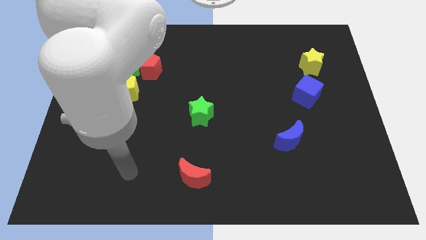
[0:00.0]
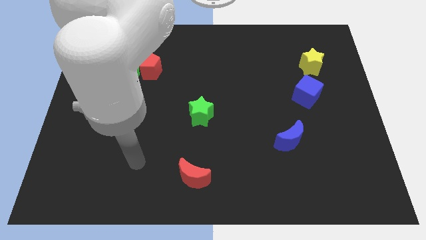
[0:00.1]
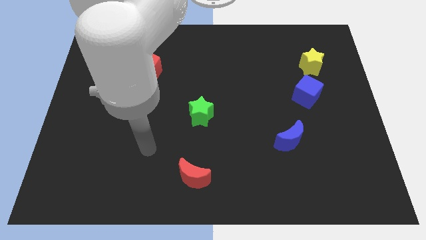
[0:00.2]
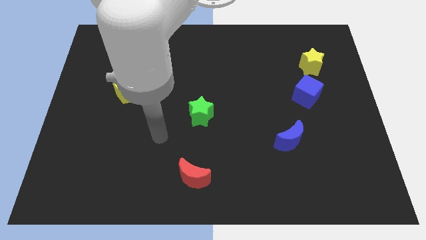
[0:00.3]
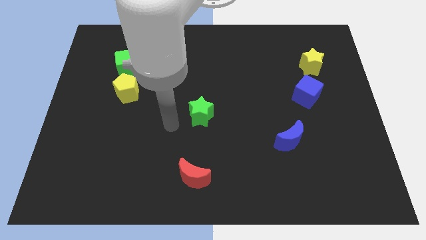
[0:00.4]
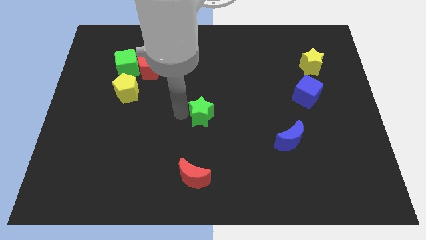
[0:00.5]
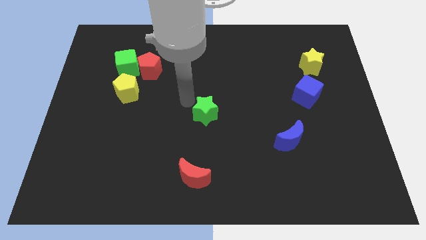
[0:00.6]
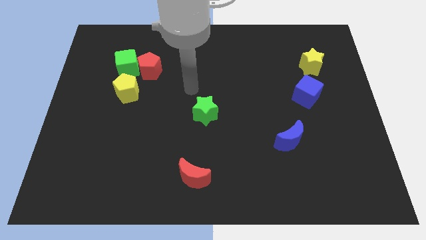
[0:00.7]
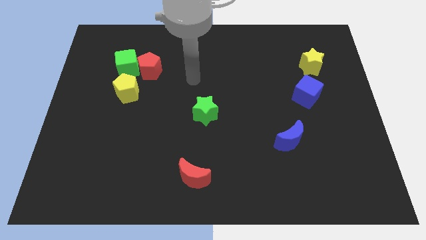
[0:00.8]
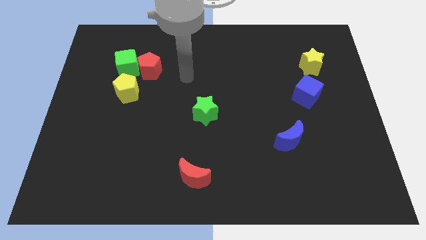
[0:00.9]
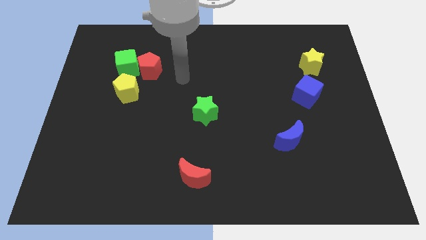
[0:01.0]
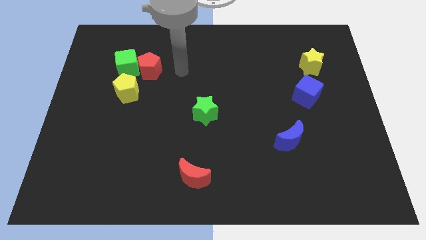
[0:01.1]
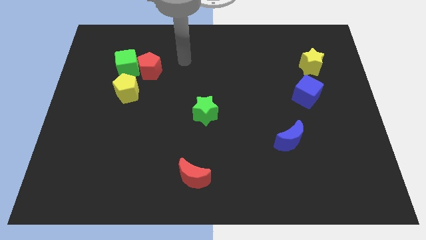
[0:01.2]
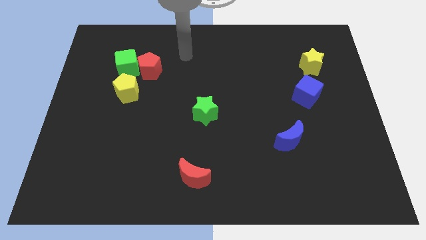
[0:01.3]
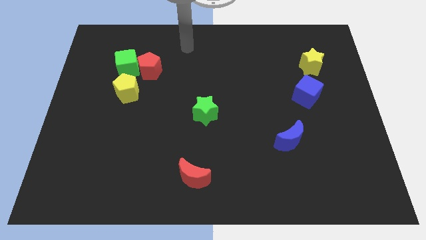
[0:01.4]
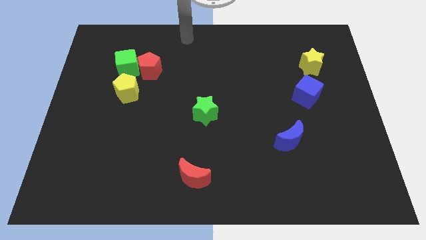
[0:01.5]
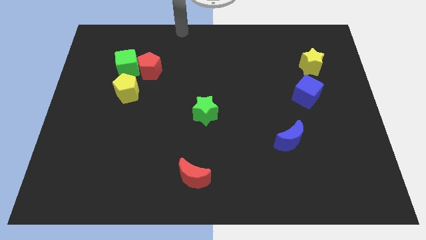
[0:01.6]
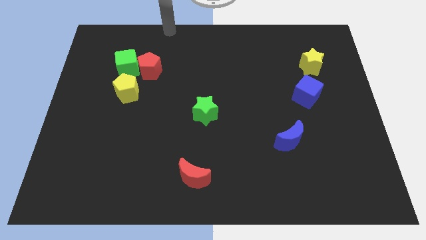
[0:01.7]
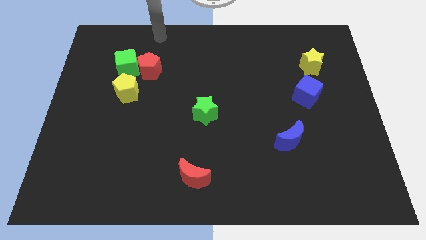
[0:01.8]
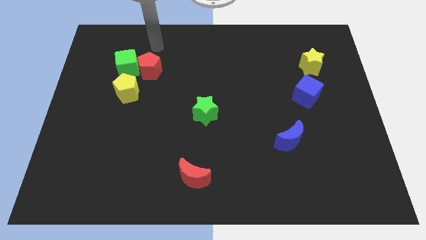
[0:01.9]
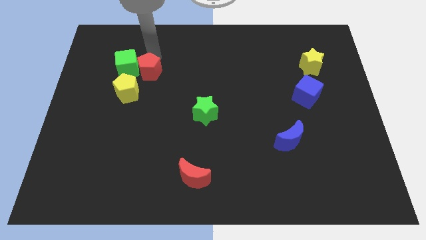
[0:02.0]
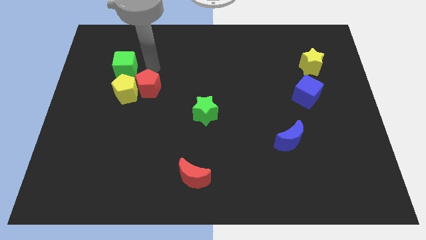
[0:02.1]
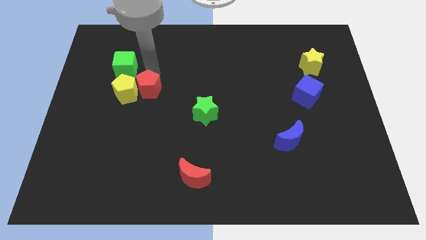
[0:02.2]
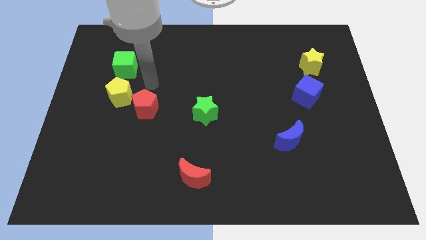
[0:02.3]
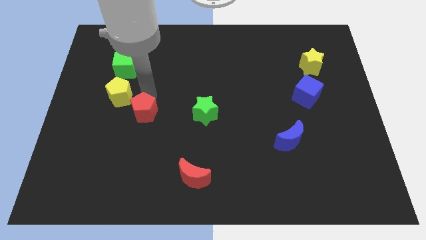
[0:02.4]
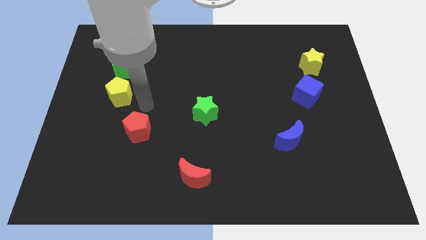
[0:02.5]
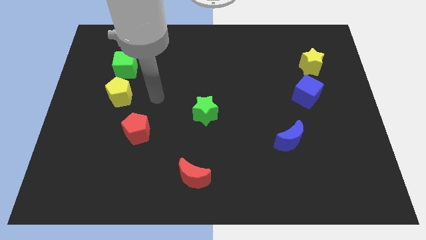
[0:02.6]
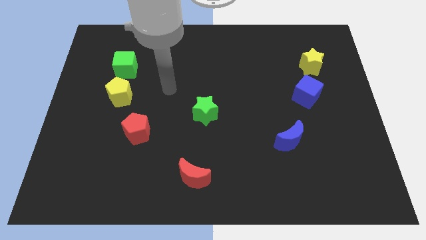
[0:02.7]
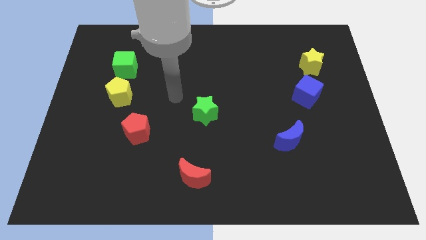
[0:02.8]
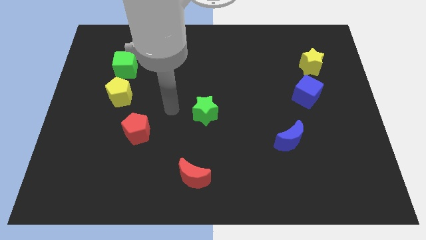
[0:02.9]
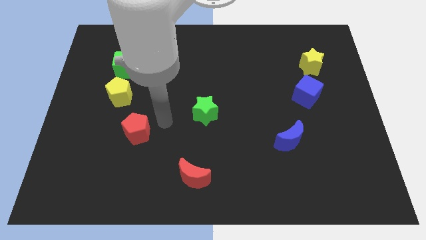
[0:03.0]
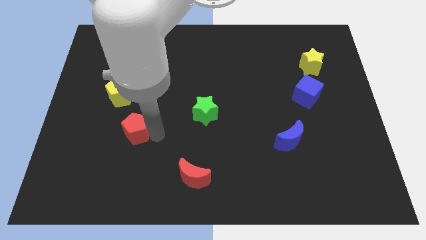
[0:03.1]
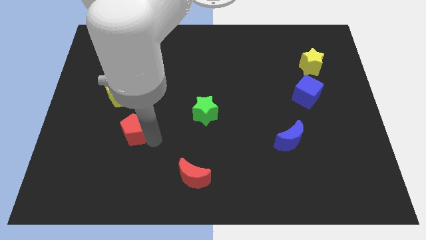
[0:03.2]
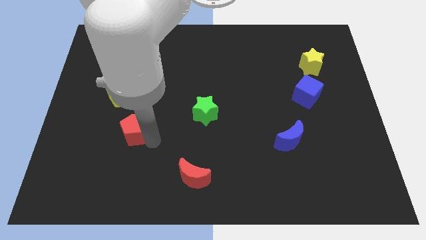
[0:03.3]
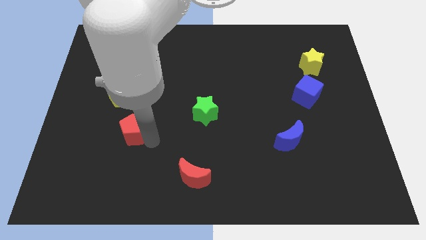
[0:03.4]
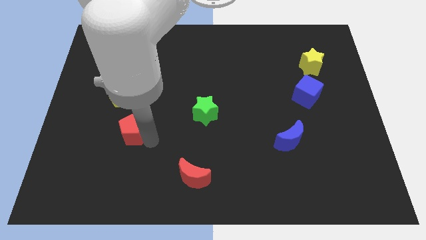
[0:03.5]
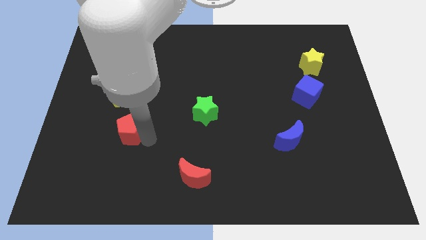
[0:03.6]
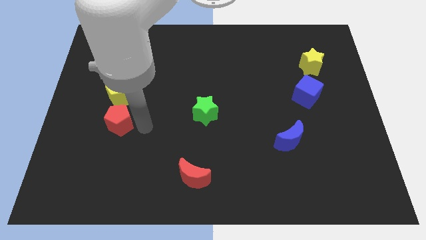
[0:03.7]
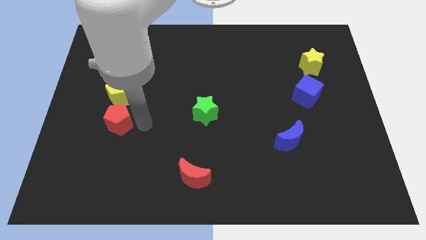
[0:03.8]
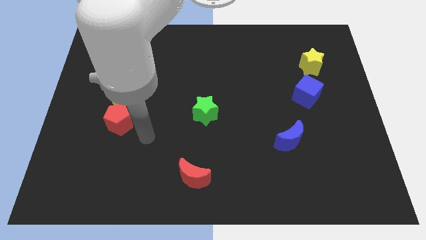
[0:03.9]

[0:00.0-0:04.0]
place the green star and the red pentagon in a horizontal line

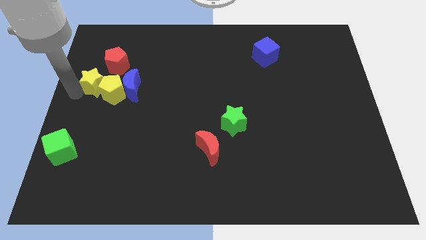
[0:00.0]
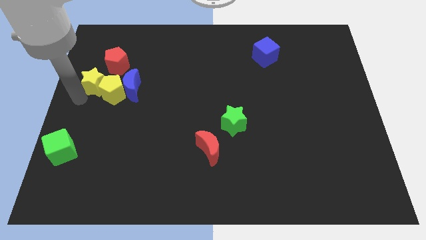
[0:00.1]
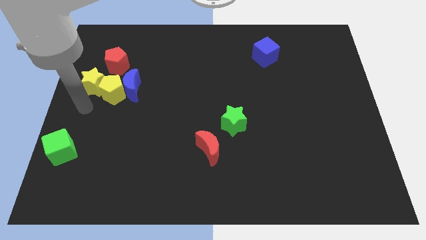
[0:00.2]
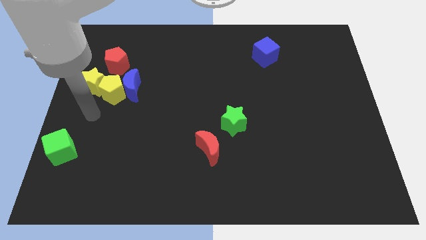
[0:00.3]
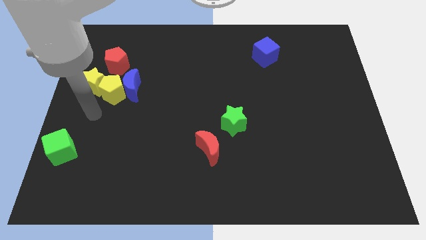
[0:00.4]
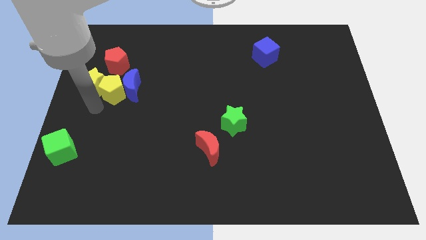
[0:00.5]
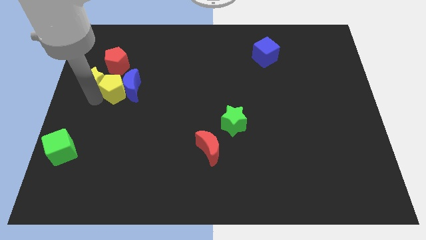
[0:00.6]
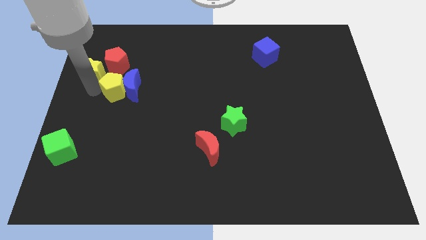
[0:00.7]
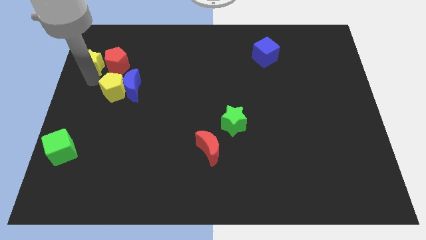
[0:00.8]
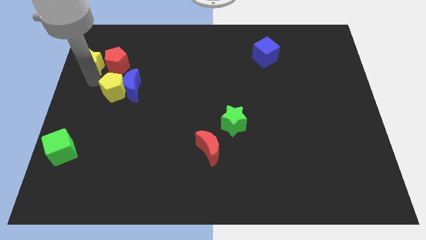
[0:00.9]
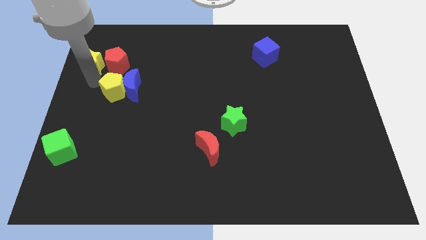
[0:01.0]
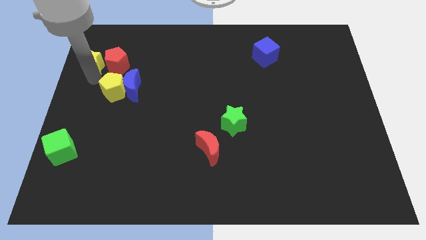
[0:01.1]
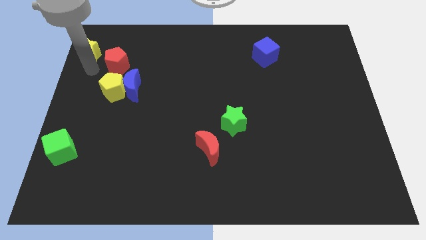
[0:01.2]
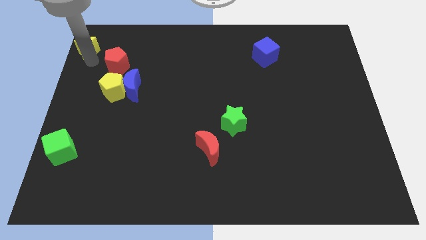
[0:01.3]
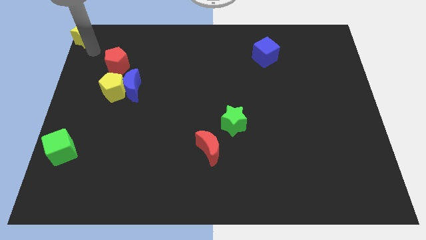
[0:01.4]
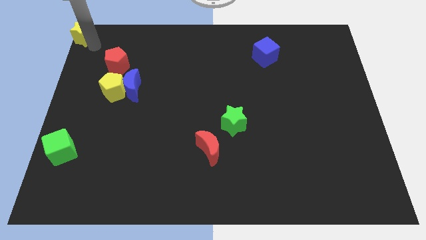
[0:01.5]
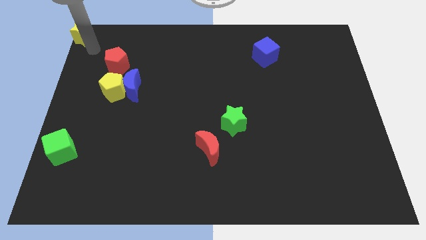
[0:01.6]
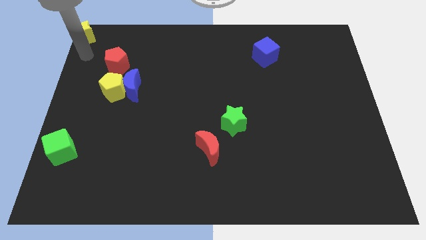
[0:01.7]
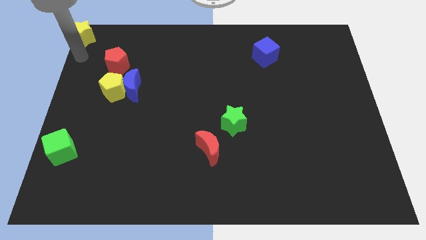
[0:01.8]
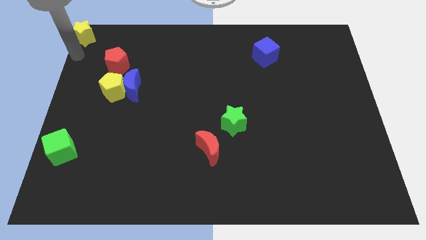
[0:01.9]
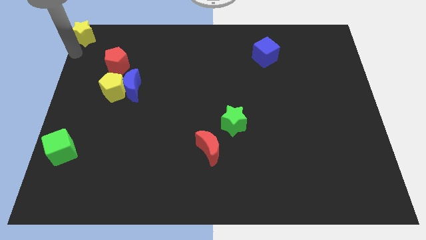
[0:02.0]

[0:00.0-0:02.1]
move the yellow star to the top left corner of the board

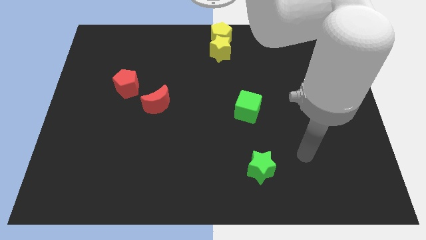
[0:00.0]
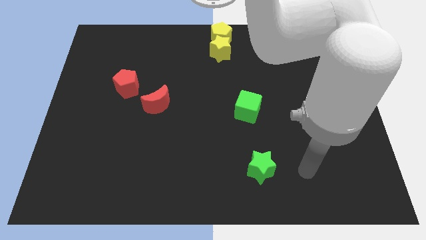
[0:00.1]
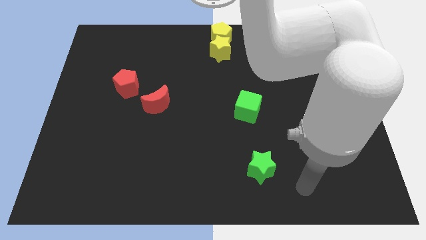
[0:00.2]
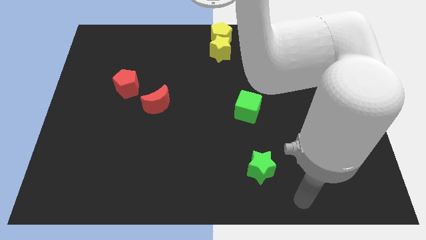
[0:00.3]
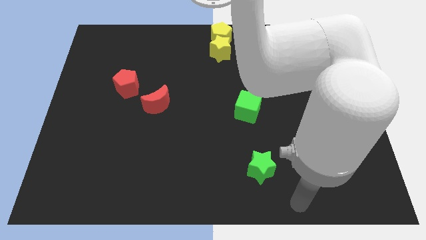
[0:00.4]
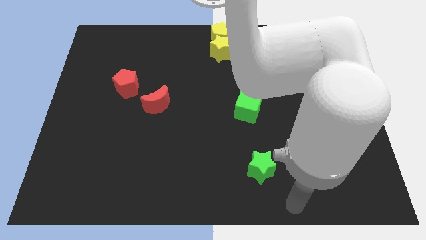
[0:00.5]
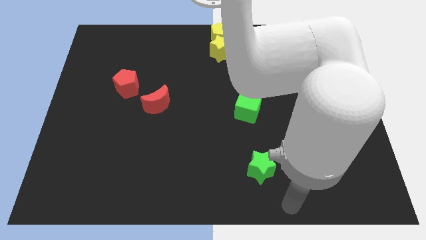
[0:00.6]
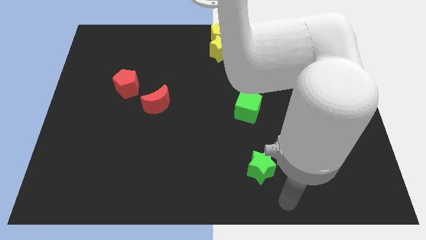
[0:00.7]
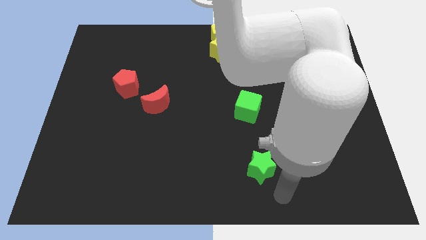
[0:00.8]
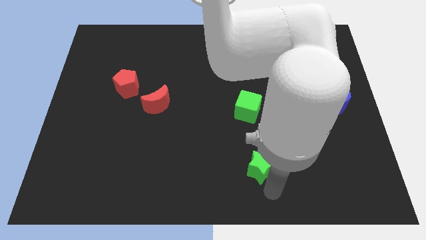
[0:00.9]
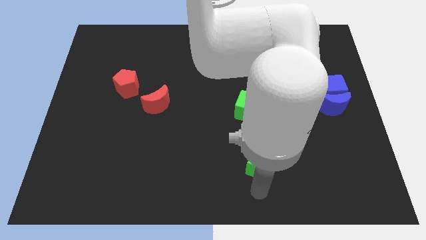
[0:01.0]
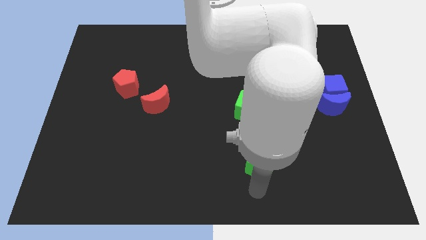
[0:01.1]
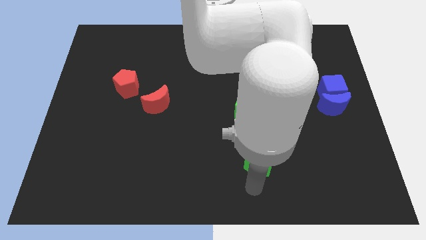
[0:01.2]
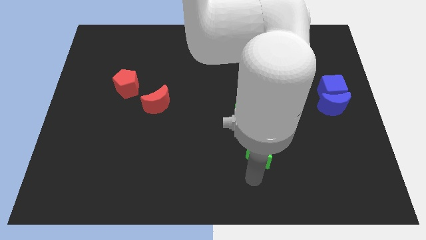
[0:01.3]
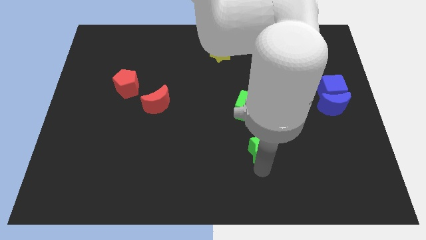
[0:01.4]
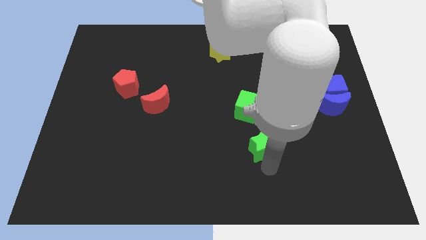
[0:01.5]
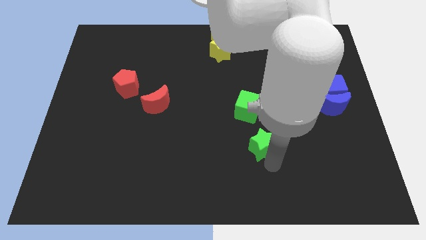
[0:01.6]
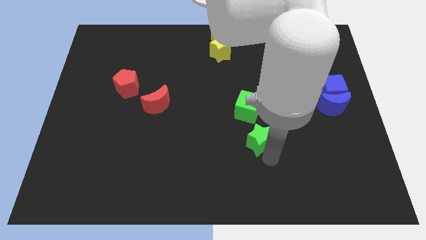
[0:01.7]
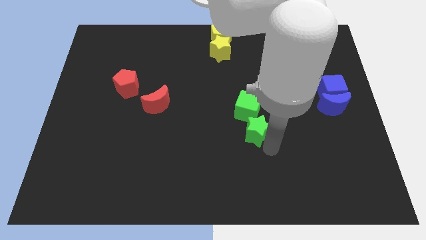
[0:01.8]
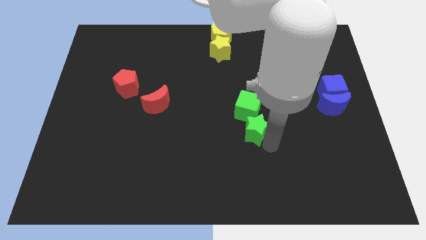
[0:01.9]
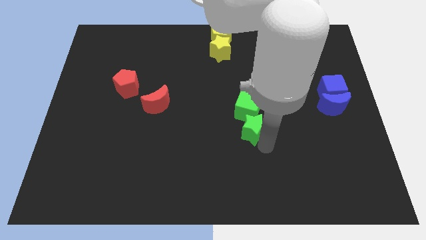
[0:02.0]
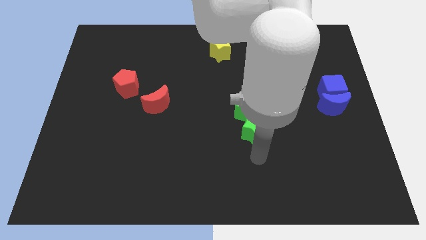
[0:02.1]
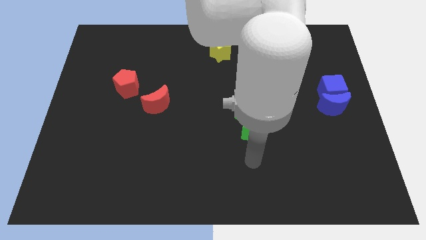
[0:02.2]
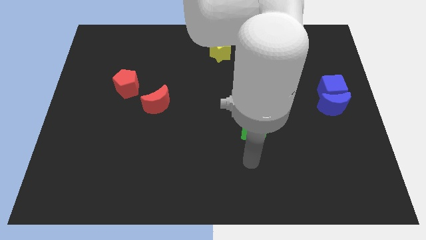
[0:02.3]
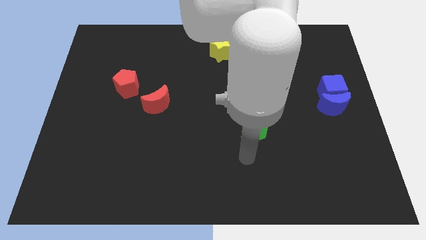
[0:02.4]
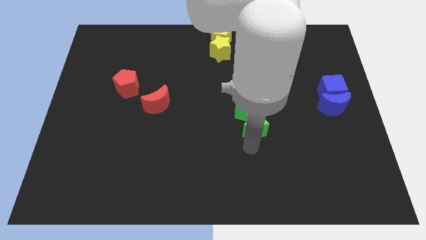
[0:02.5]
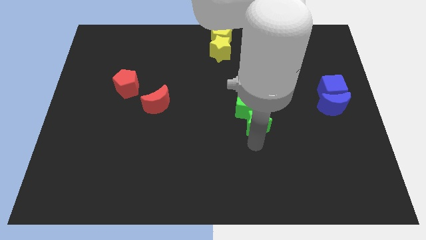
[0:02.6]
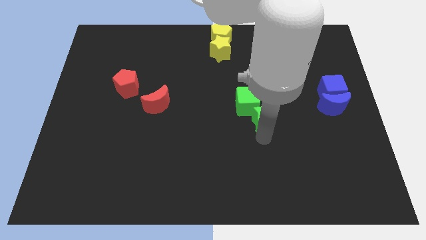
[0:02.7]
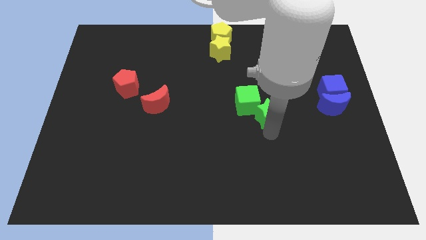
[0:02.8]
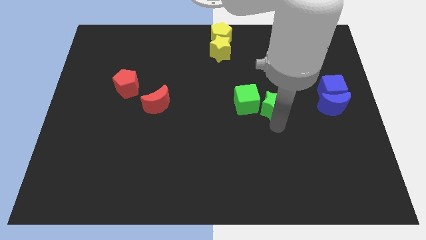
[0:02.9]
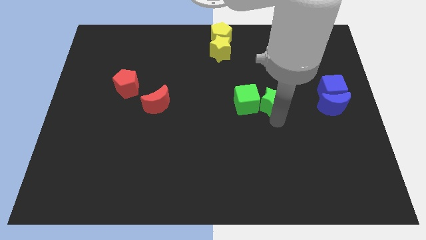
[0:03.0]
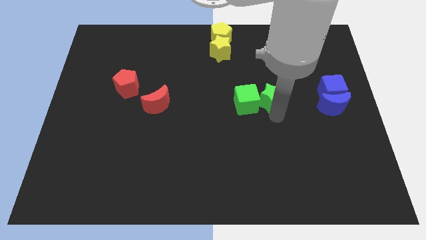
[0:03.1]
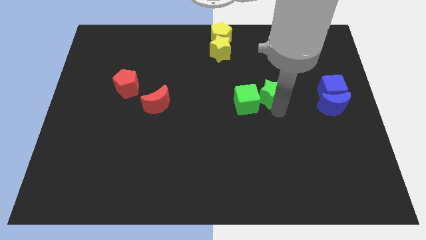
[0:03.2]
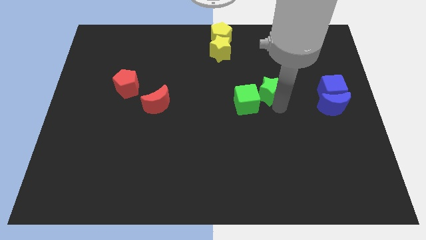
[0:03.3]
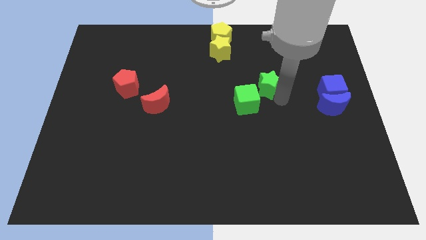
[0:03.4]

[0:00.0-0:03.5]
push the green star to the right of the green cube
